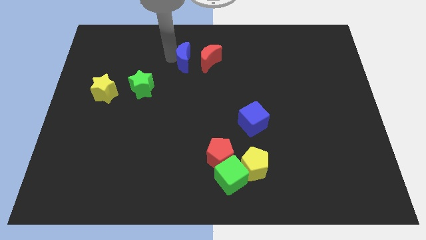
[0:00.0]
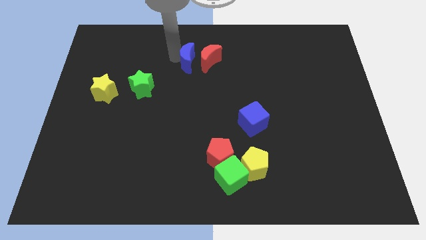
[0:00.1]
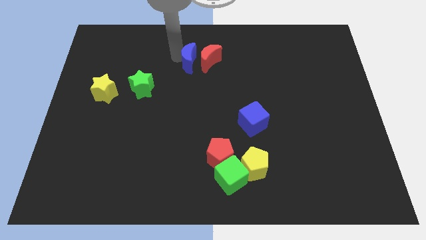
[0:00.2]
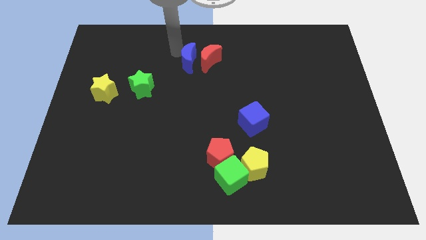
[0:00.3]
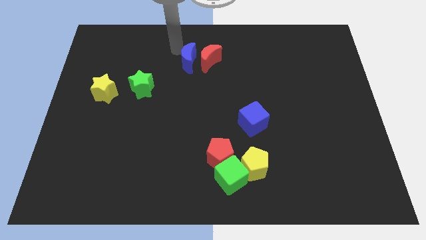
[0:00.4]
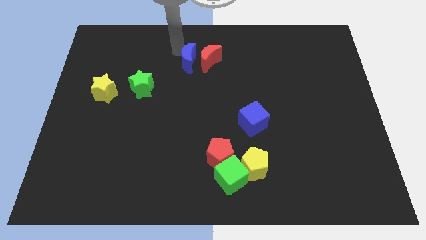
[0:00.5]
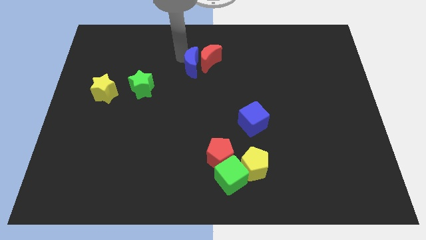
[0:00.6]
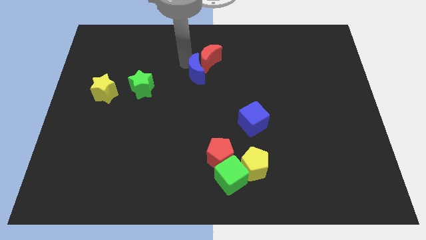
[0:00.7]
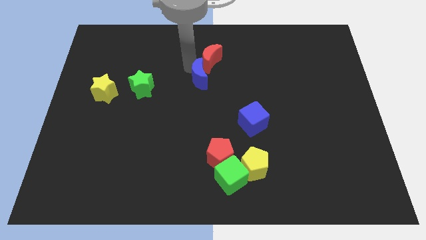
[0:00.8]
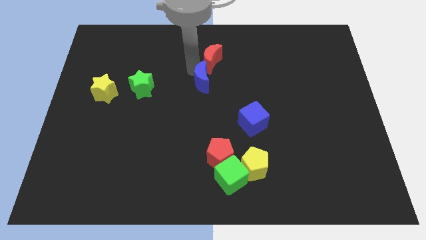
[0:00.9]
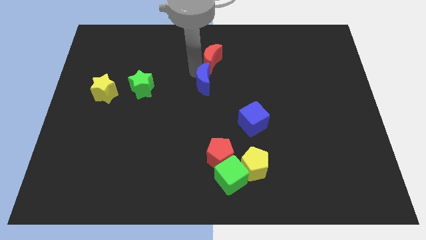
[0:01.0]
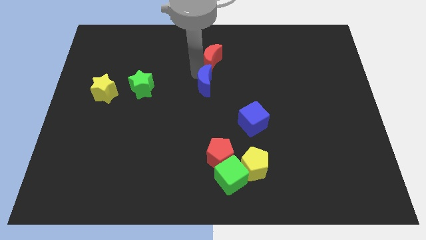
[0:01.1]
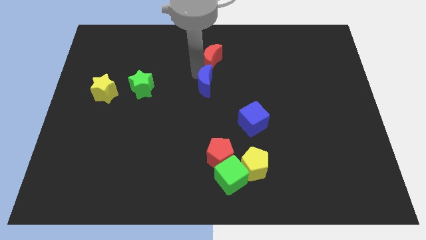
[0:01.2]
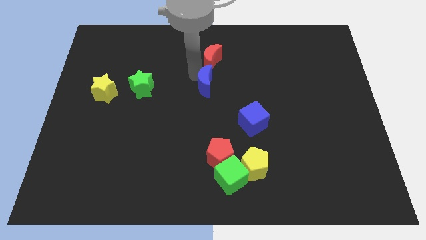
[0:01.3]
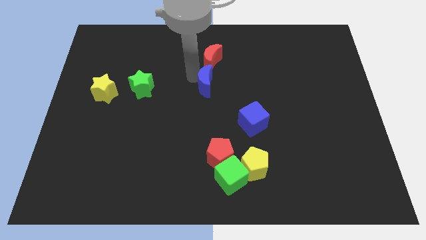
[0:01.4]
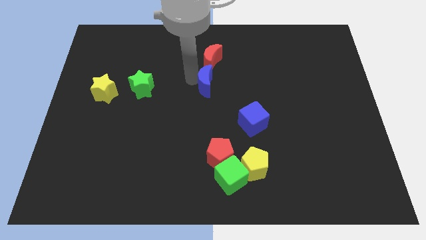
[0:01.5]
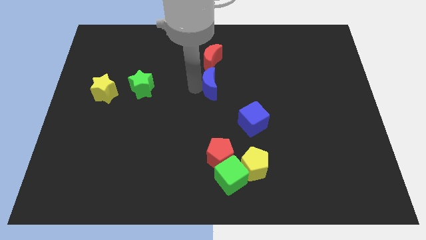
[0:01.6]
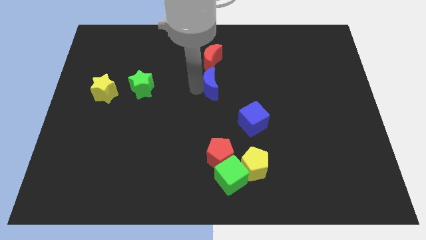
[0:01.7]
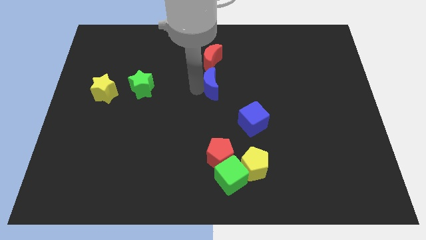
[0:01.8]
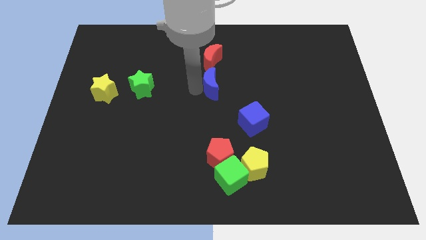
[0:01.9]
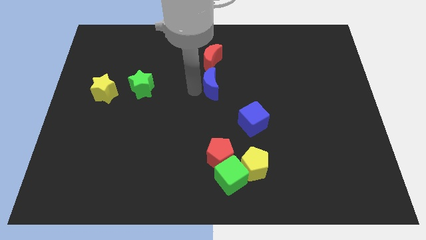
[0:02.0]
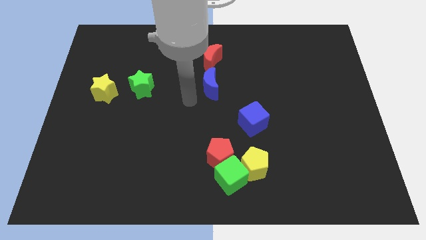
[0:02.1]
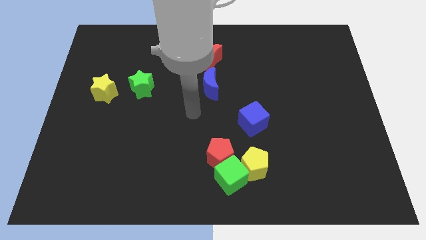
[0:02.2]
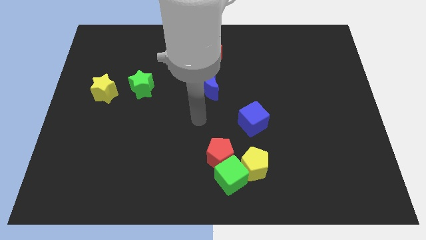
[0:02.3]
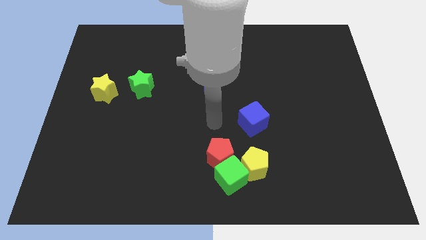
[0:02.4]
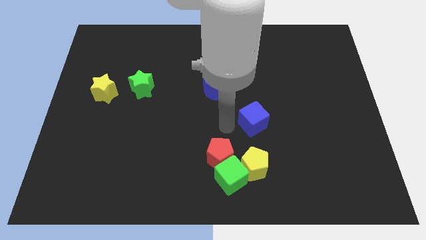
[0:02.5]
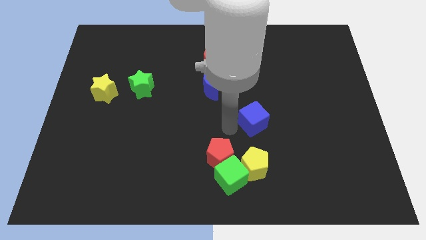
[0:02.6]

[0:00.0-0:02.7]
place the blue crescent towards the bottom of the red moon

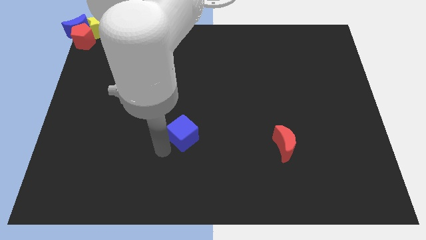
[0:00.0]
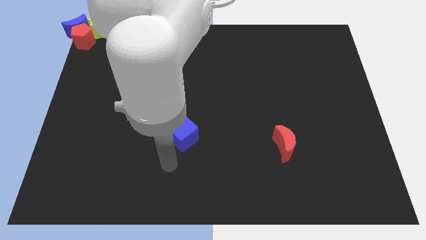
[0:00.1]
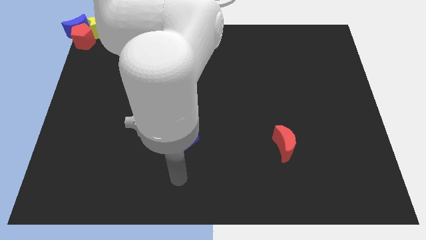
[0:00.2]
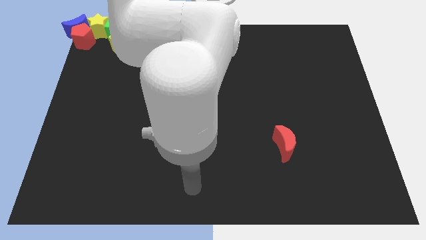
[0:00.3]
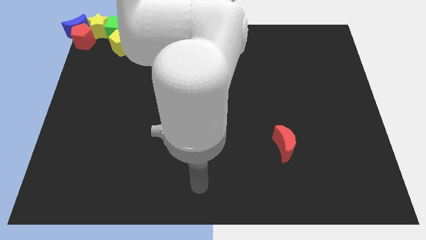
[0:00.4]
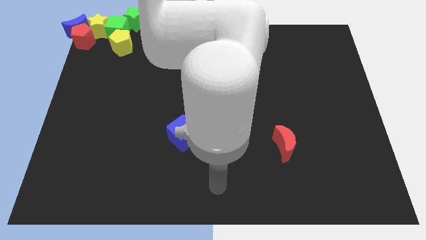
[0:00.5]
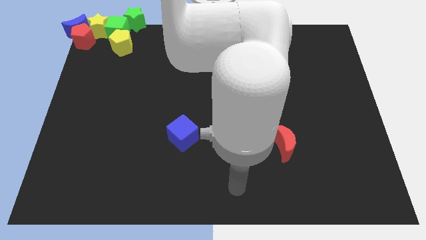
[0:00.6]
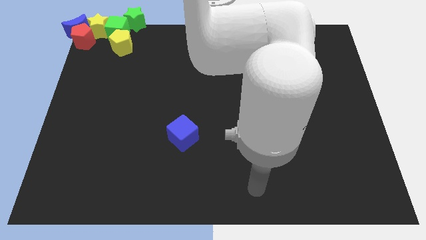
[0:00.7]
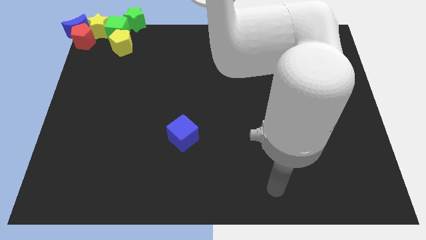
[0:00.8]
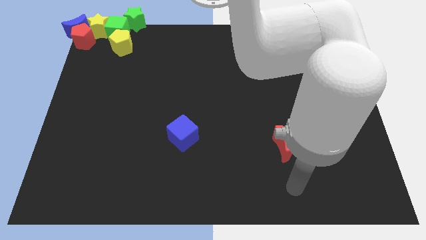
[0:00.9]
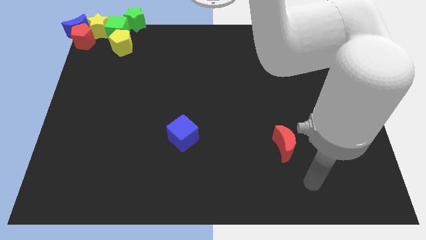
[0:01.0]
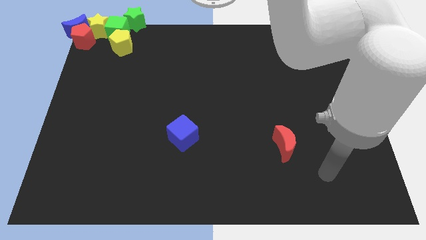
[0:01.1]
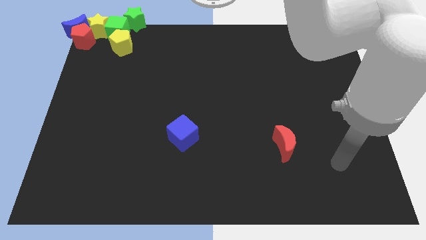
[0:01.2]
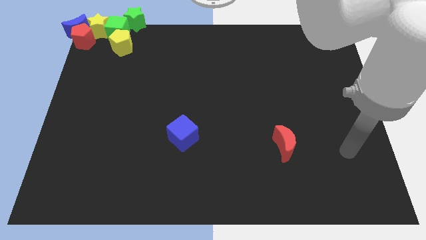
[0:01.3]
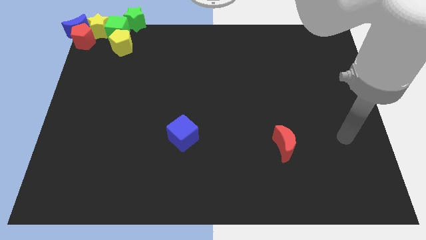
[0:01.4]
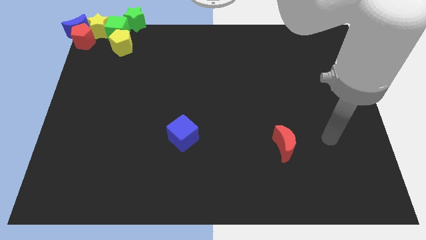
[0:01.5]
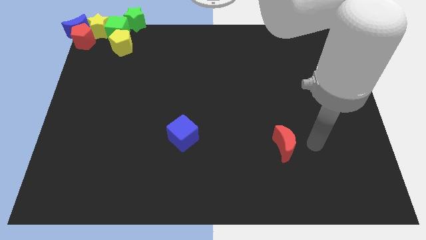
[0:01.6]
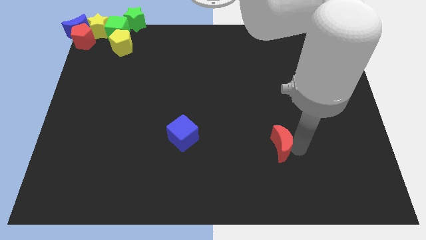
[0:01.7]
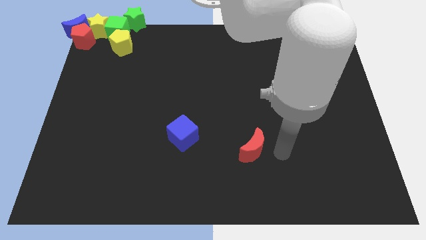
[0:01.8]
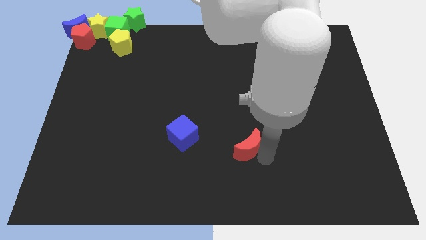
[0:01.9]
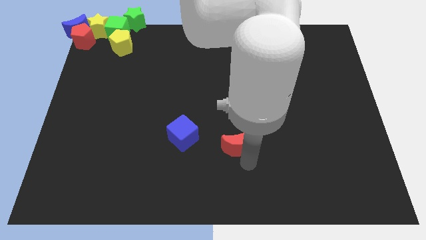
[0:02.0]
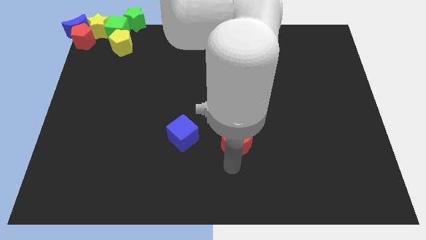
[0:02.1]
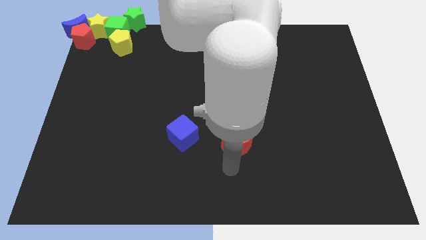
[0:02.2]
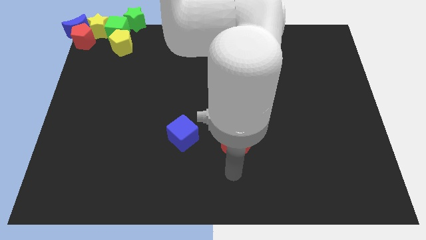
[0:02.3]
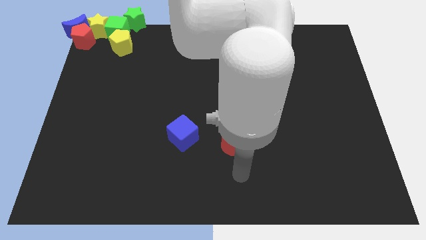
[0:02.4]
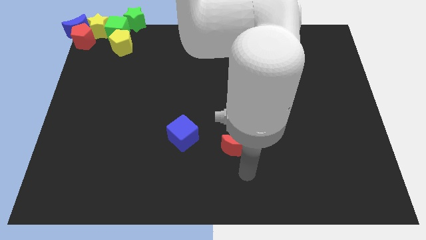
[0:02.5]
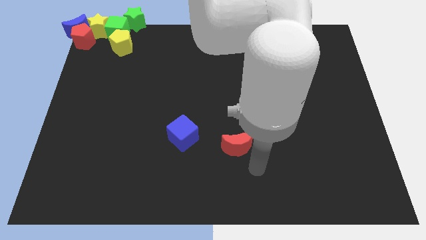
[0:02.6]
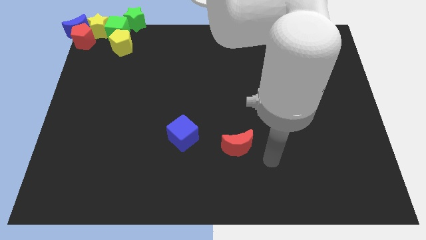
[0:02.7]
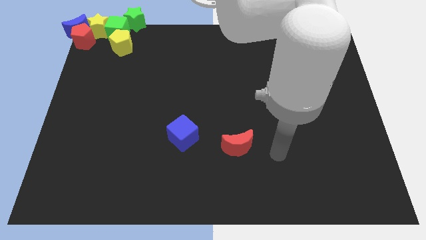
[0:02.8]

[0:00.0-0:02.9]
place the red moon parallel to blue cube

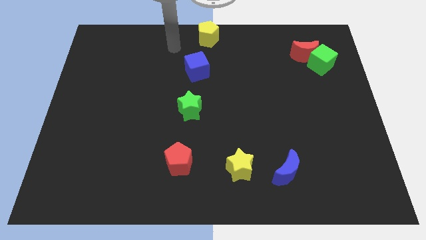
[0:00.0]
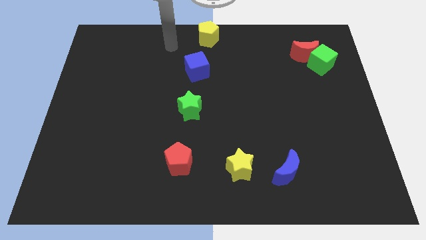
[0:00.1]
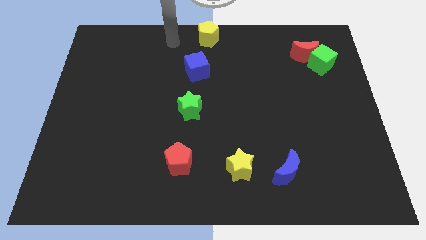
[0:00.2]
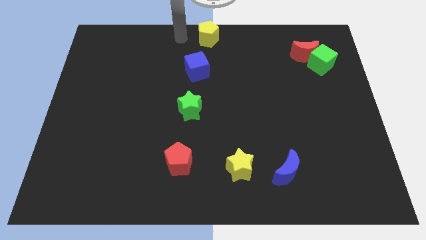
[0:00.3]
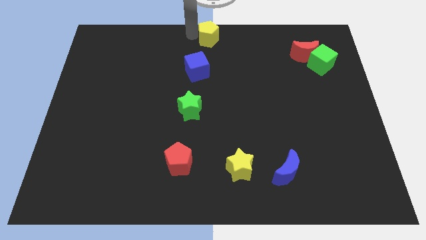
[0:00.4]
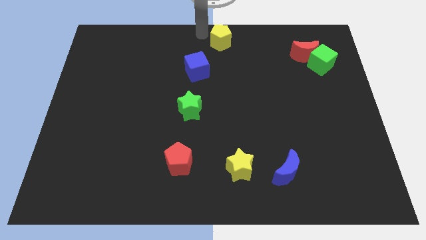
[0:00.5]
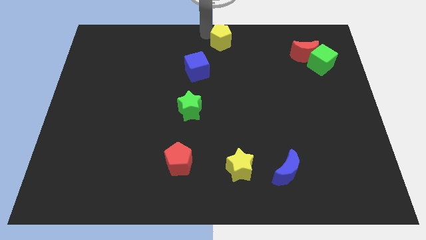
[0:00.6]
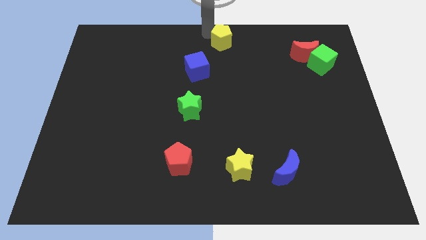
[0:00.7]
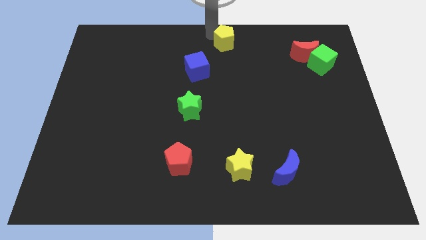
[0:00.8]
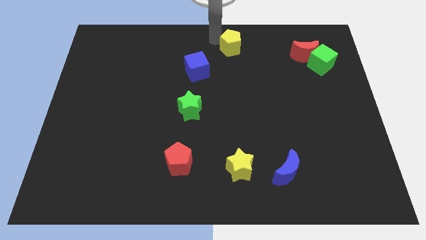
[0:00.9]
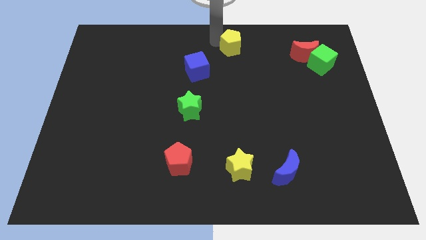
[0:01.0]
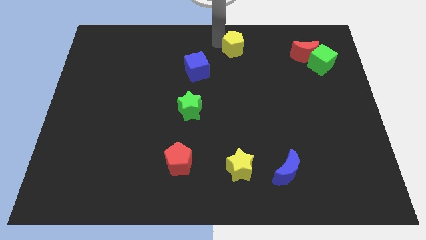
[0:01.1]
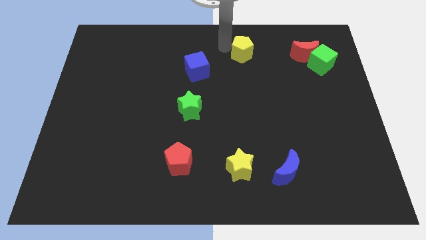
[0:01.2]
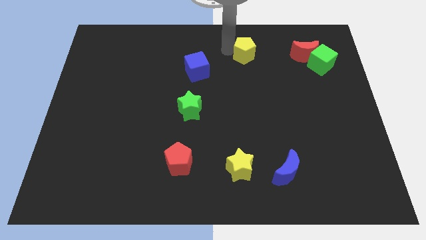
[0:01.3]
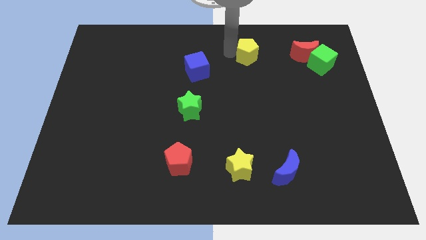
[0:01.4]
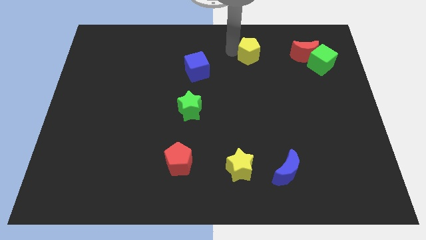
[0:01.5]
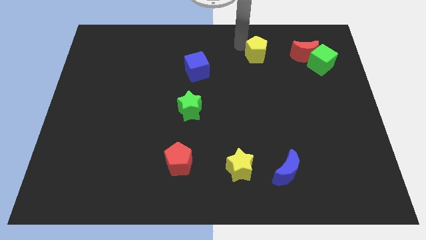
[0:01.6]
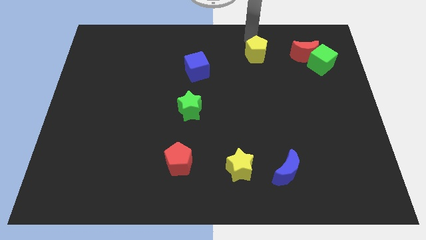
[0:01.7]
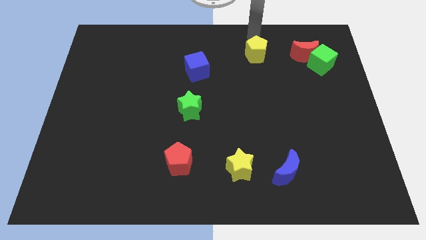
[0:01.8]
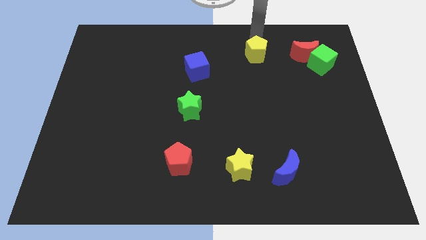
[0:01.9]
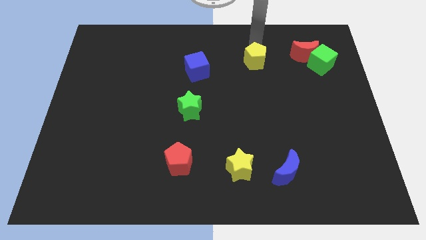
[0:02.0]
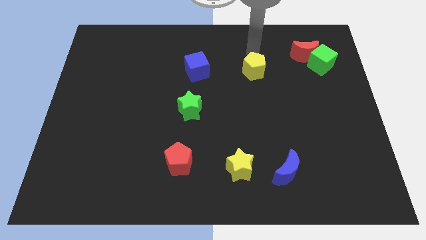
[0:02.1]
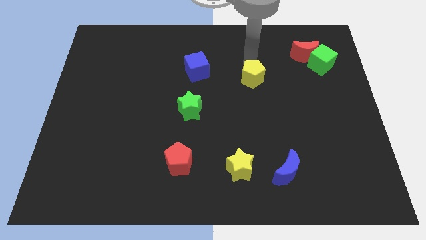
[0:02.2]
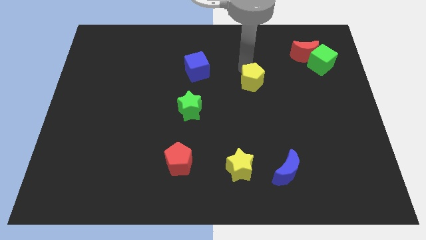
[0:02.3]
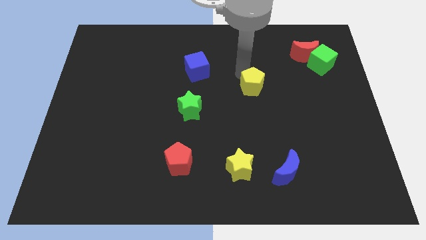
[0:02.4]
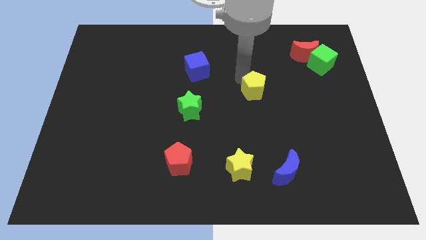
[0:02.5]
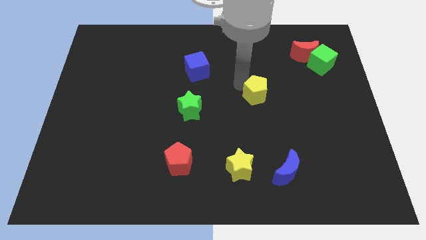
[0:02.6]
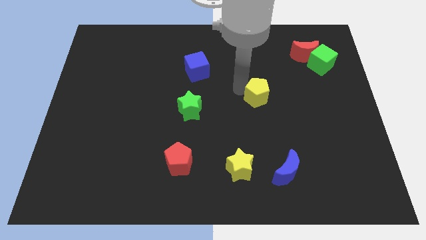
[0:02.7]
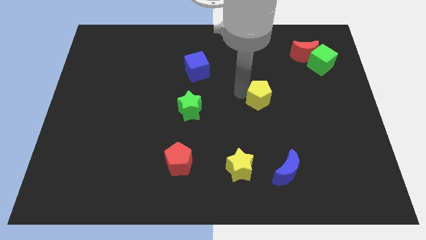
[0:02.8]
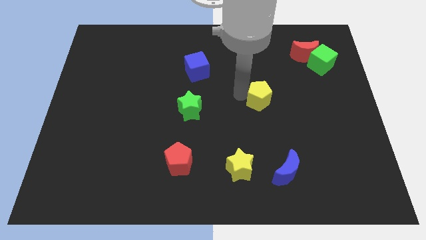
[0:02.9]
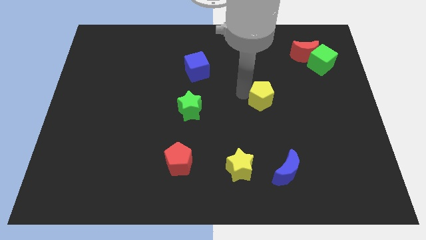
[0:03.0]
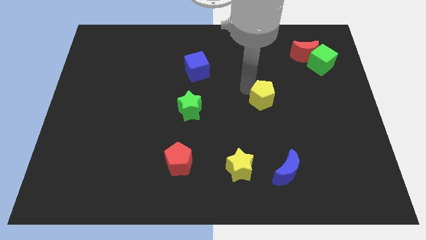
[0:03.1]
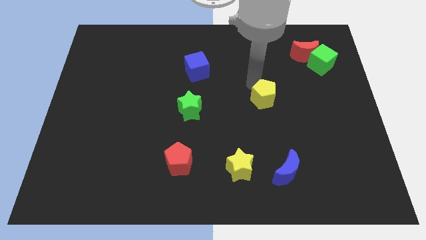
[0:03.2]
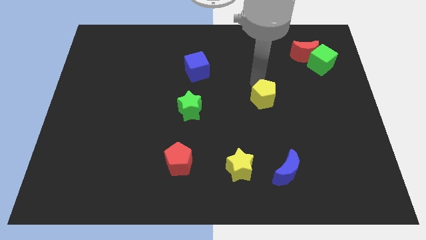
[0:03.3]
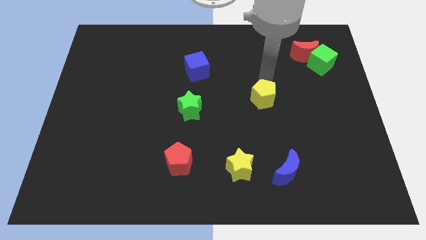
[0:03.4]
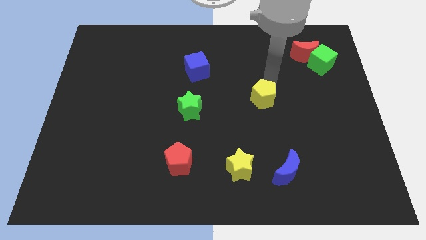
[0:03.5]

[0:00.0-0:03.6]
push the yellow pentagon to the right of the green star
